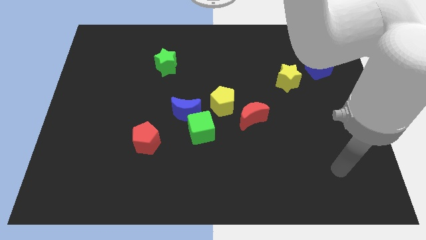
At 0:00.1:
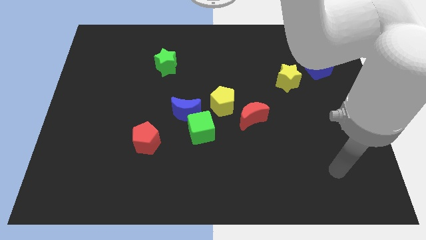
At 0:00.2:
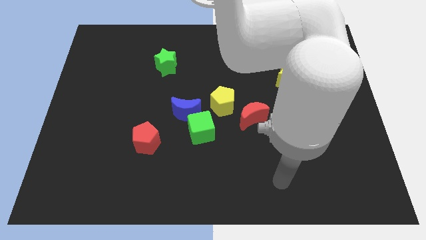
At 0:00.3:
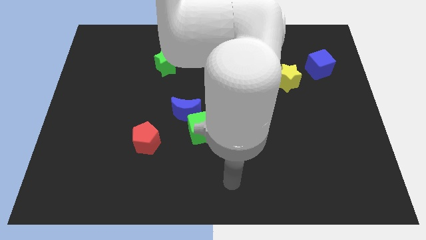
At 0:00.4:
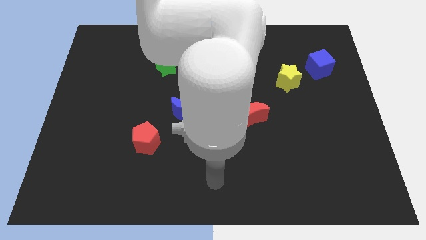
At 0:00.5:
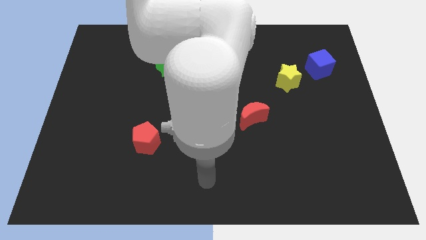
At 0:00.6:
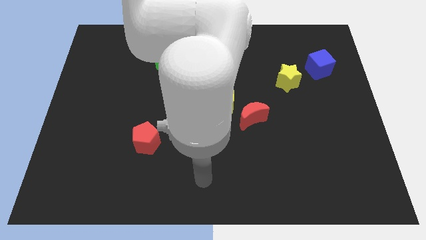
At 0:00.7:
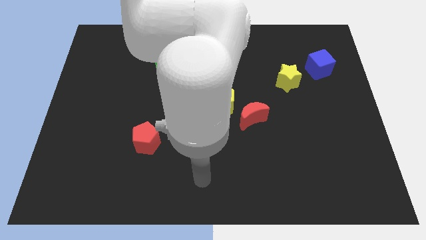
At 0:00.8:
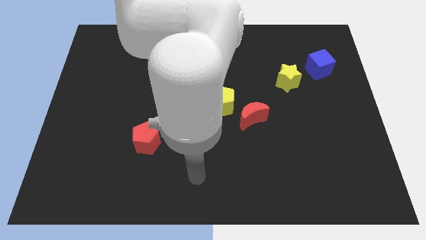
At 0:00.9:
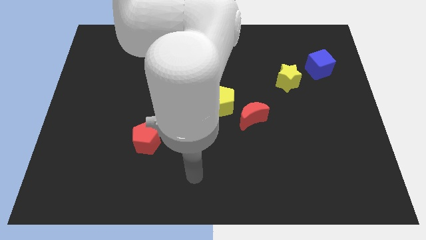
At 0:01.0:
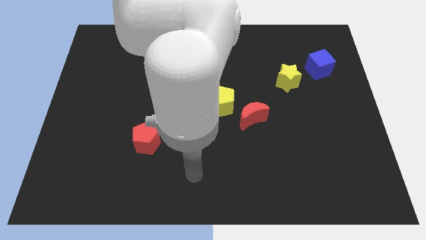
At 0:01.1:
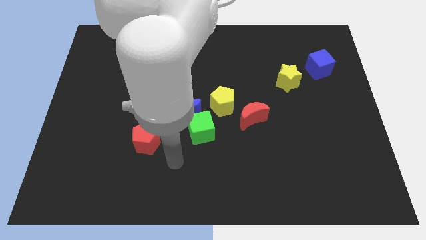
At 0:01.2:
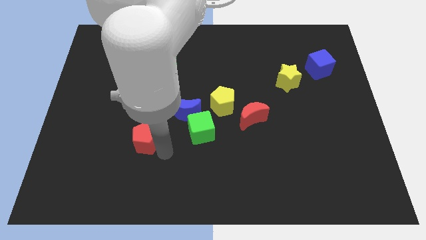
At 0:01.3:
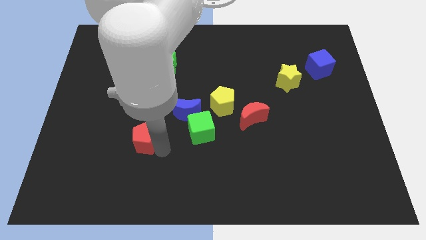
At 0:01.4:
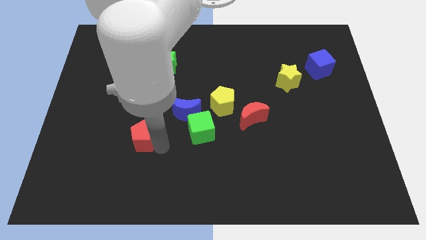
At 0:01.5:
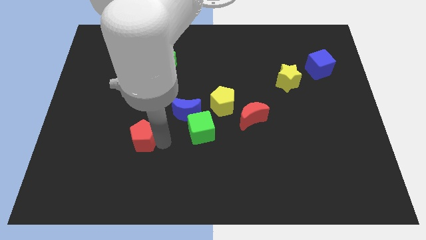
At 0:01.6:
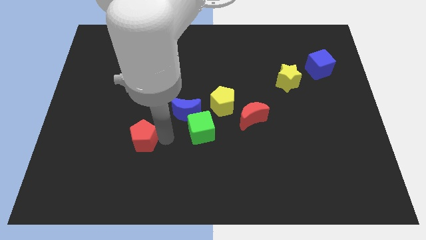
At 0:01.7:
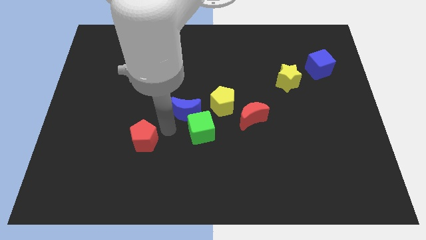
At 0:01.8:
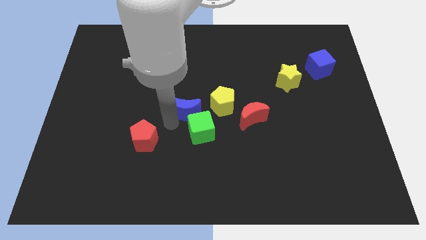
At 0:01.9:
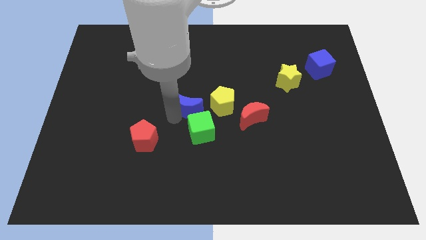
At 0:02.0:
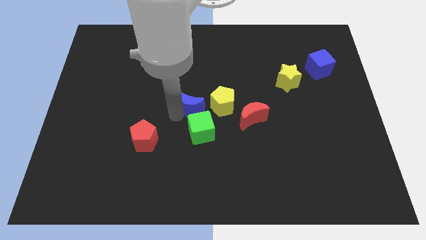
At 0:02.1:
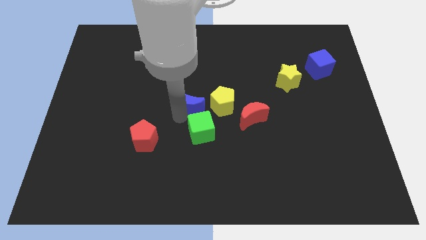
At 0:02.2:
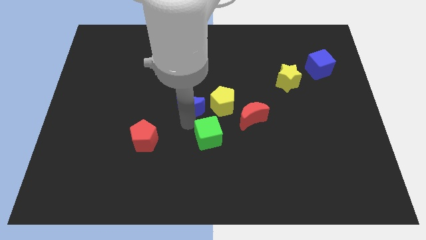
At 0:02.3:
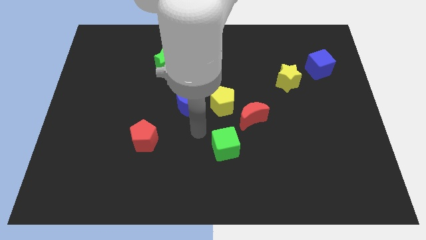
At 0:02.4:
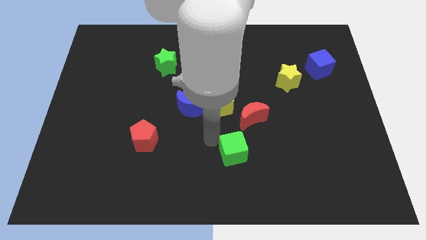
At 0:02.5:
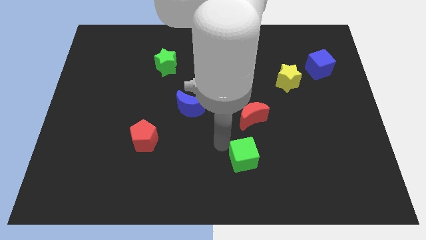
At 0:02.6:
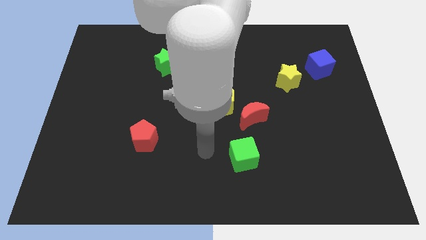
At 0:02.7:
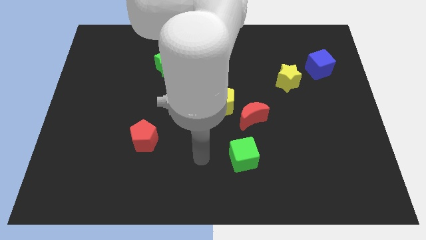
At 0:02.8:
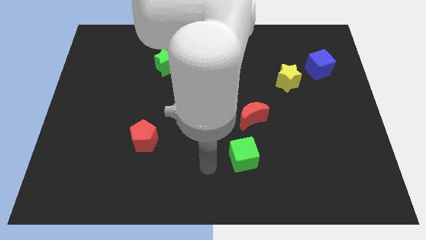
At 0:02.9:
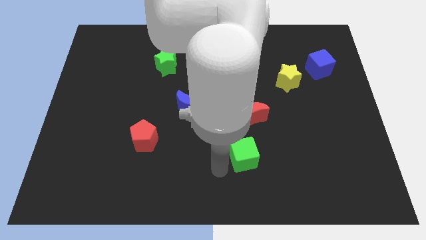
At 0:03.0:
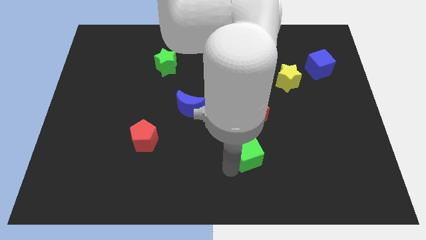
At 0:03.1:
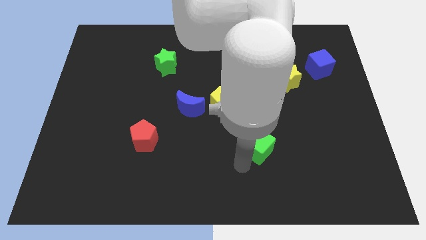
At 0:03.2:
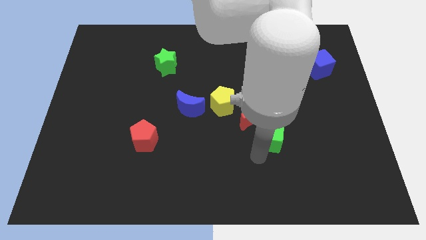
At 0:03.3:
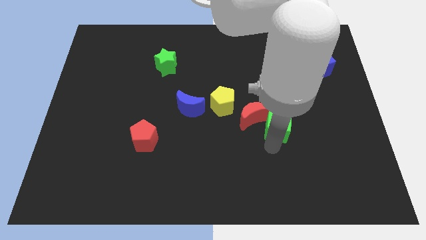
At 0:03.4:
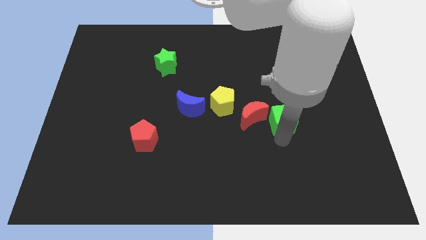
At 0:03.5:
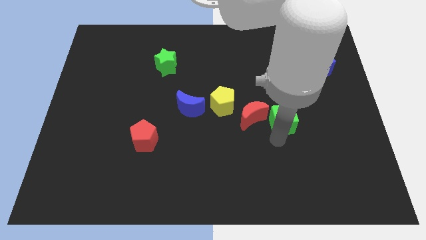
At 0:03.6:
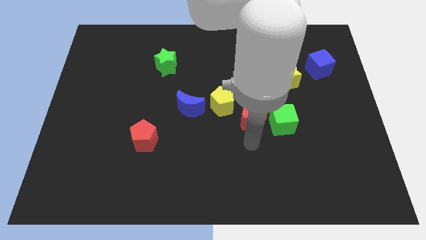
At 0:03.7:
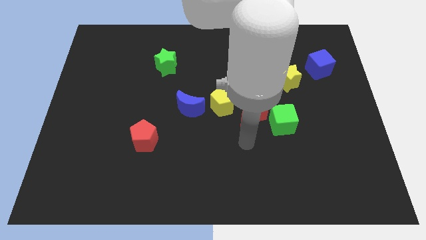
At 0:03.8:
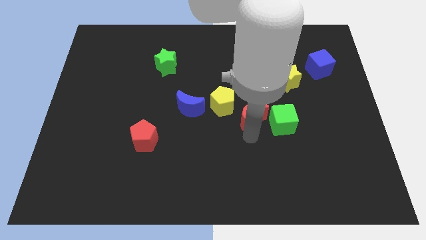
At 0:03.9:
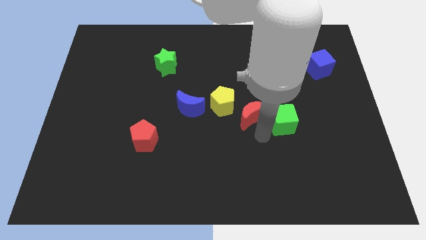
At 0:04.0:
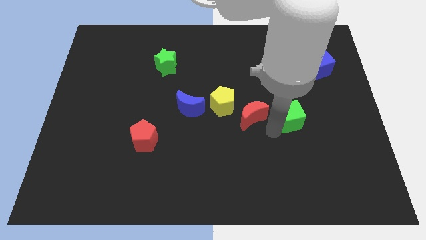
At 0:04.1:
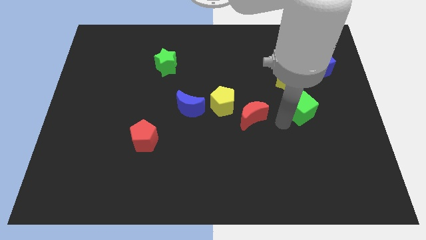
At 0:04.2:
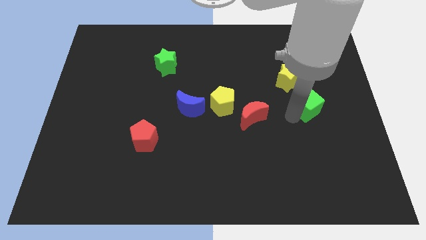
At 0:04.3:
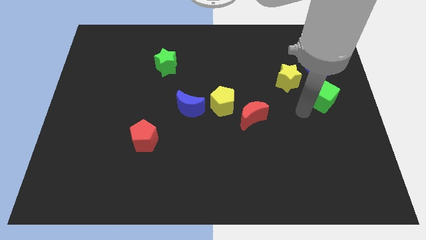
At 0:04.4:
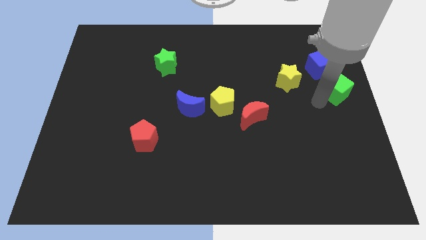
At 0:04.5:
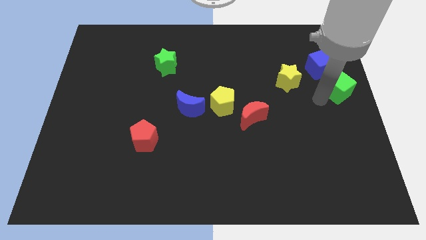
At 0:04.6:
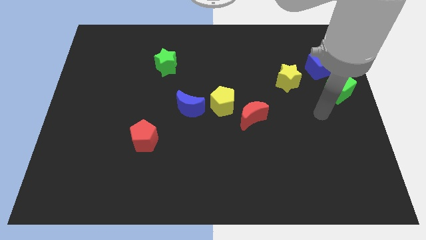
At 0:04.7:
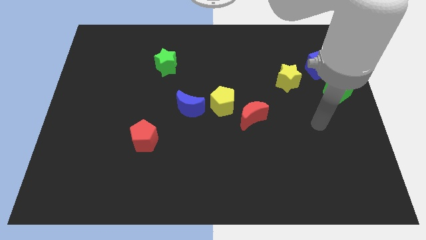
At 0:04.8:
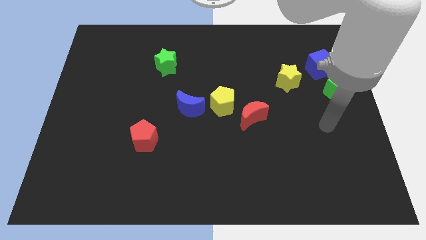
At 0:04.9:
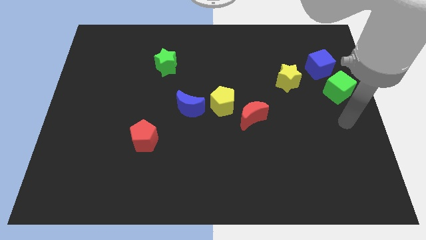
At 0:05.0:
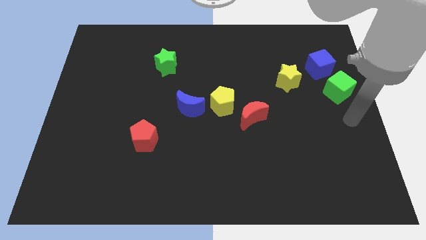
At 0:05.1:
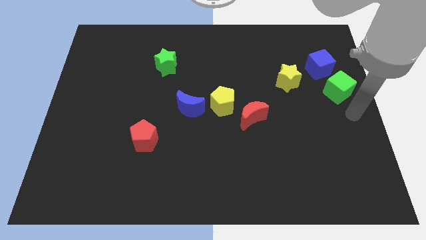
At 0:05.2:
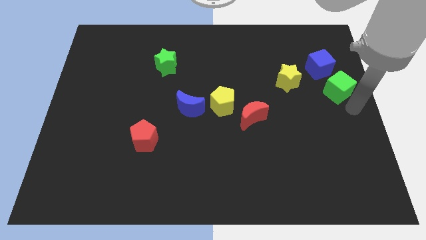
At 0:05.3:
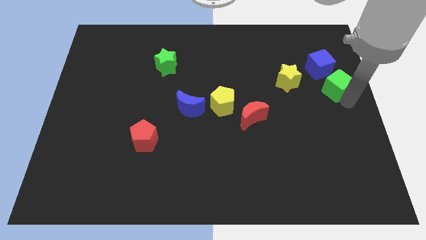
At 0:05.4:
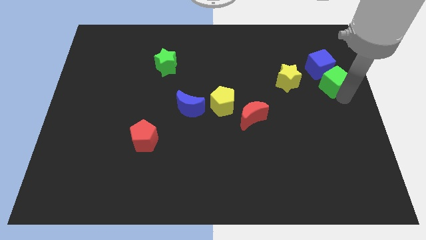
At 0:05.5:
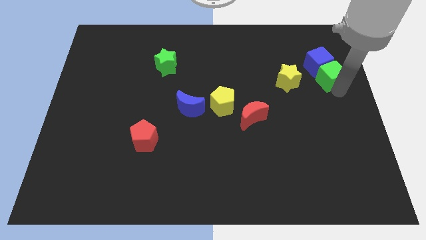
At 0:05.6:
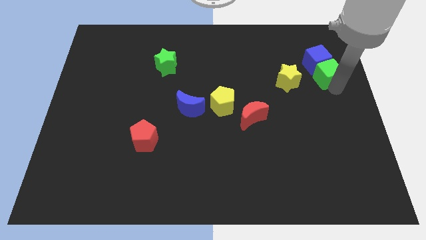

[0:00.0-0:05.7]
push the green cube close to the blue cube

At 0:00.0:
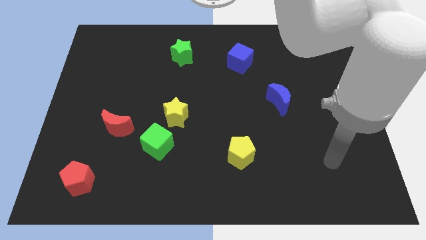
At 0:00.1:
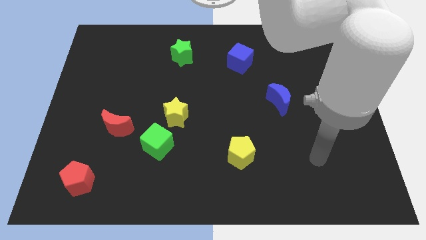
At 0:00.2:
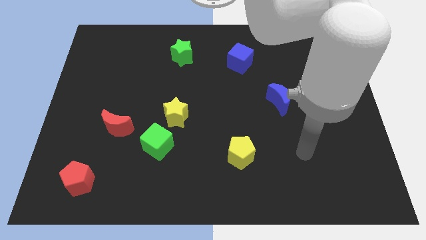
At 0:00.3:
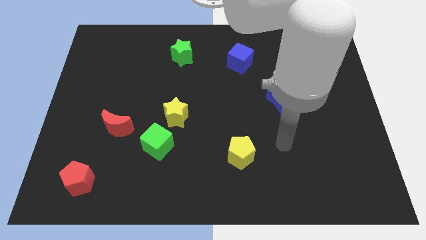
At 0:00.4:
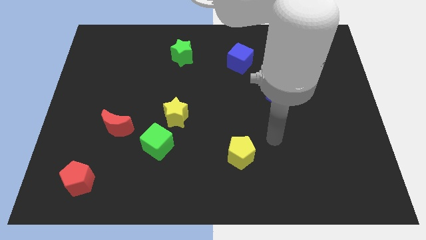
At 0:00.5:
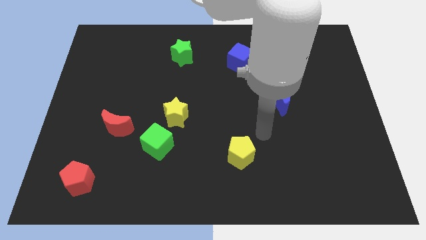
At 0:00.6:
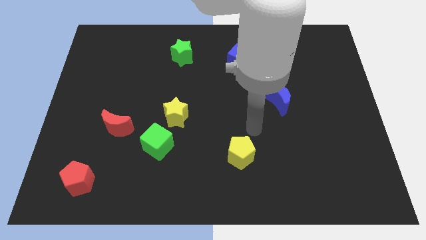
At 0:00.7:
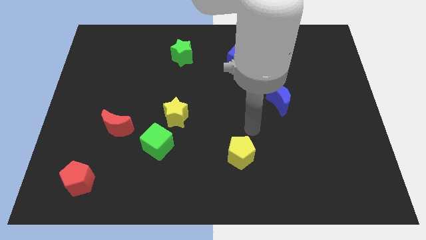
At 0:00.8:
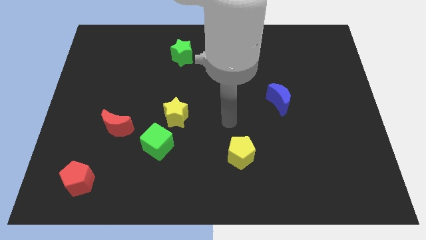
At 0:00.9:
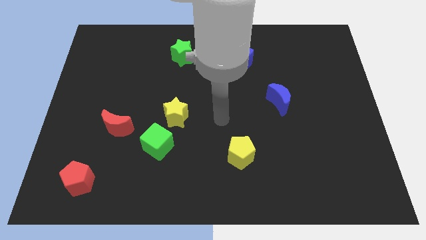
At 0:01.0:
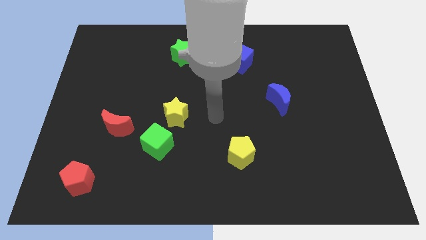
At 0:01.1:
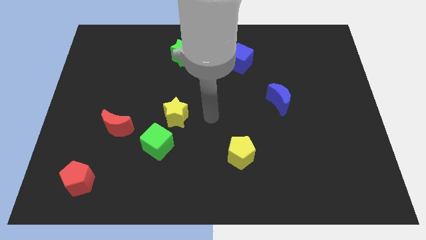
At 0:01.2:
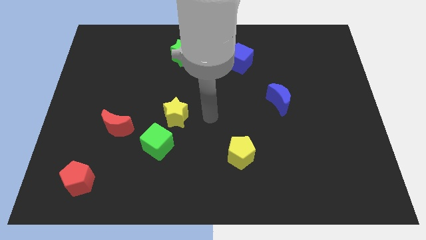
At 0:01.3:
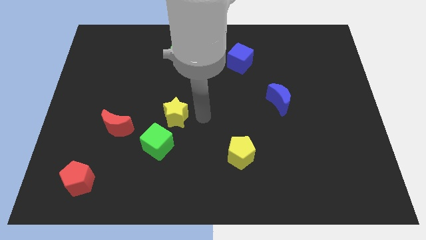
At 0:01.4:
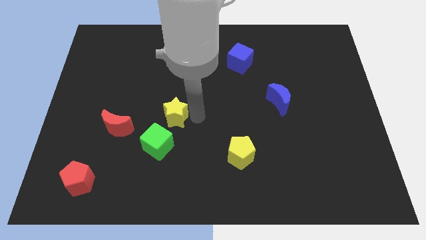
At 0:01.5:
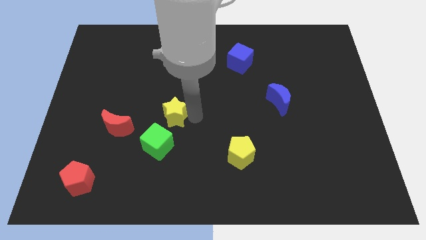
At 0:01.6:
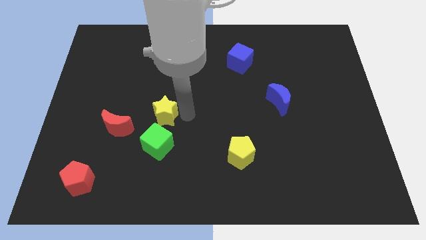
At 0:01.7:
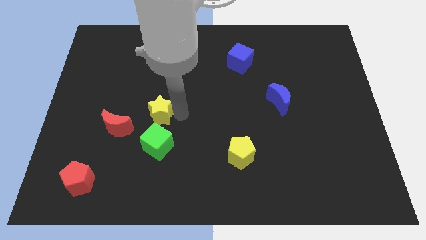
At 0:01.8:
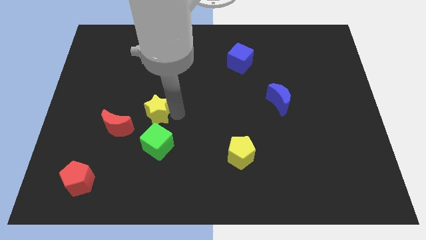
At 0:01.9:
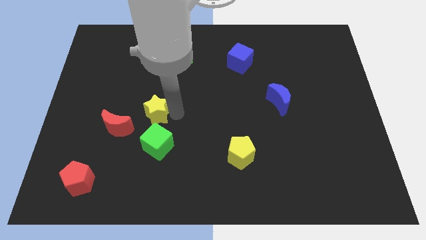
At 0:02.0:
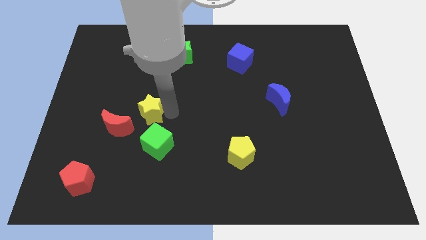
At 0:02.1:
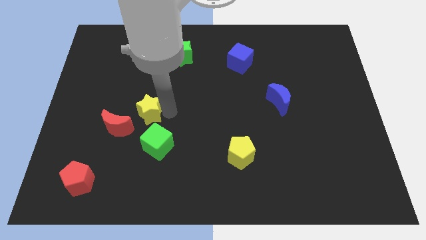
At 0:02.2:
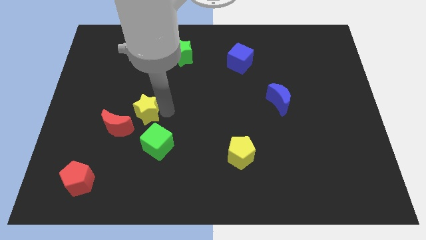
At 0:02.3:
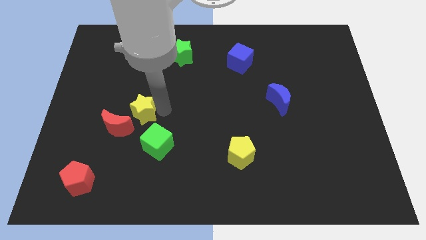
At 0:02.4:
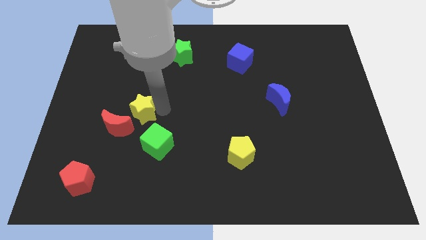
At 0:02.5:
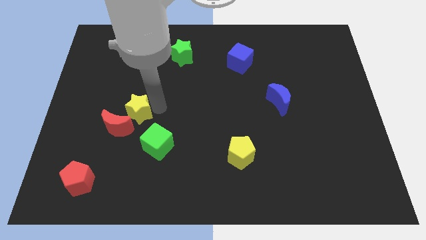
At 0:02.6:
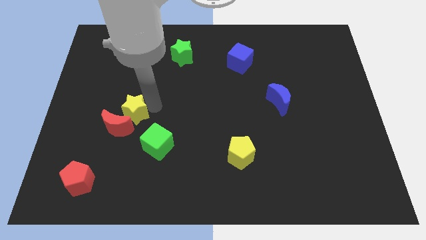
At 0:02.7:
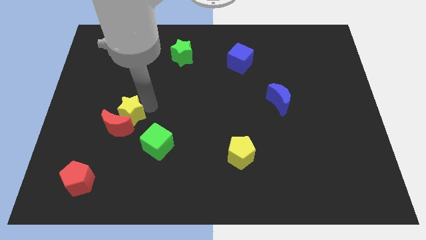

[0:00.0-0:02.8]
push the yellow star close to the red moon
